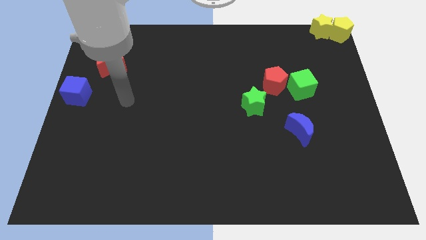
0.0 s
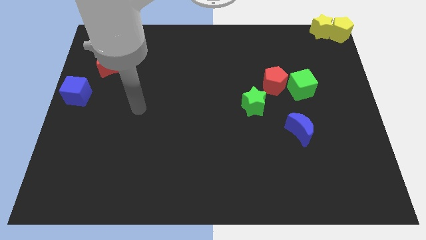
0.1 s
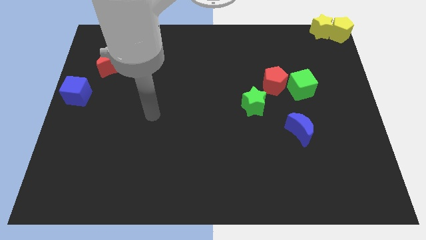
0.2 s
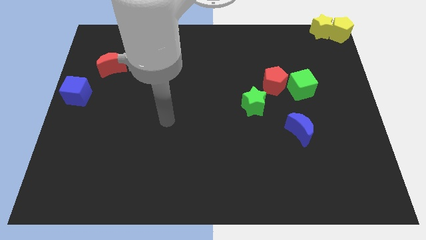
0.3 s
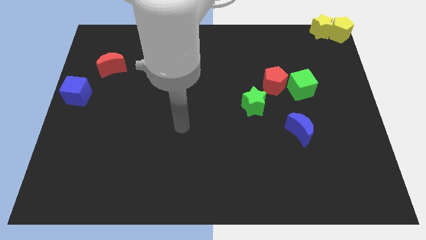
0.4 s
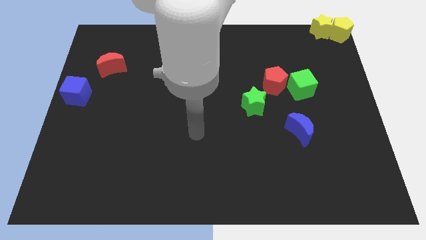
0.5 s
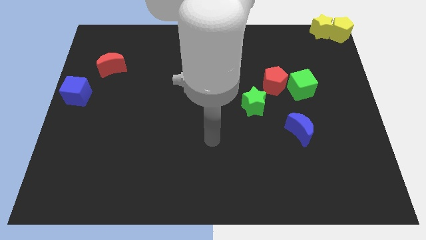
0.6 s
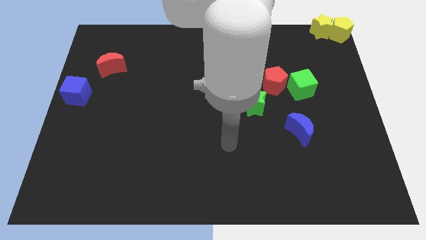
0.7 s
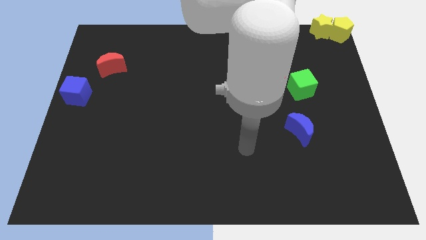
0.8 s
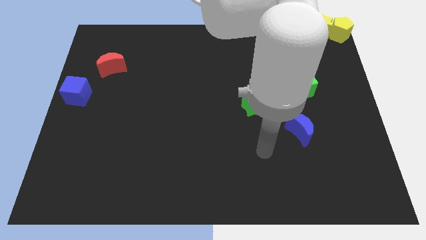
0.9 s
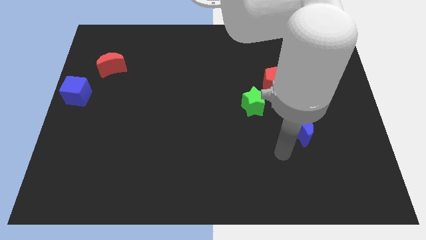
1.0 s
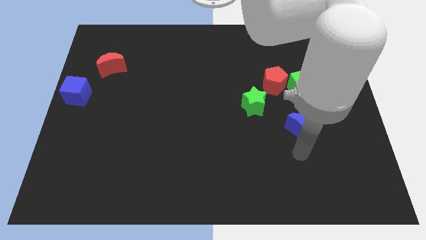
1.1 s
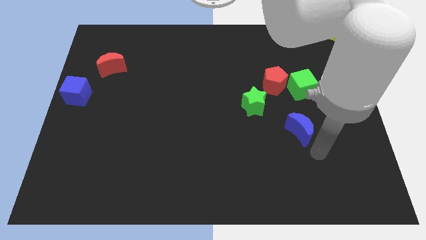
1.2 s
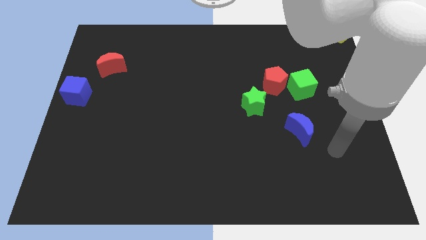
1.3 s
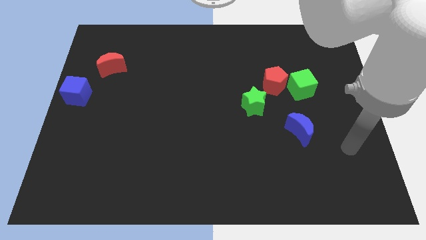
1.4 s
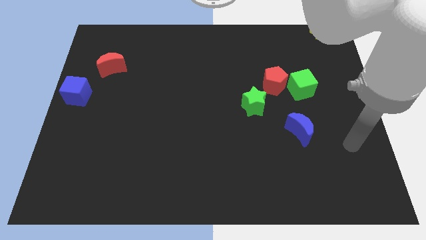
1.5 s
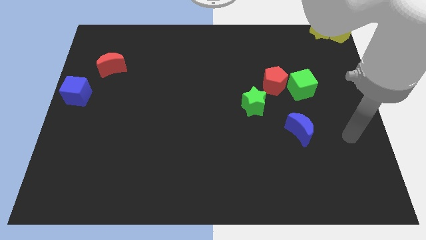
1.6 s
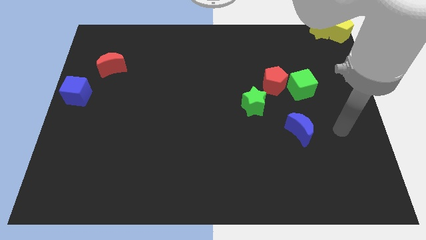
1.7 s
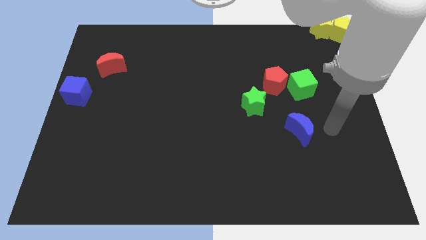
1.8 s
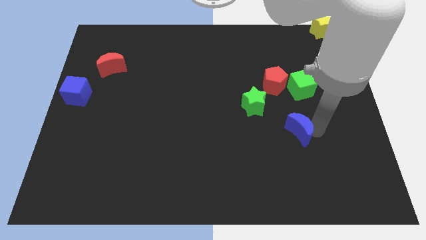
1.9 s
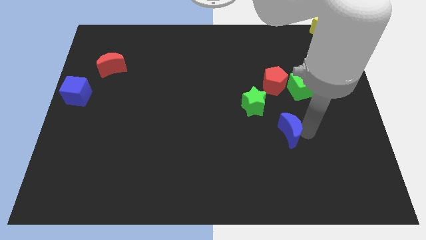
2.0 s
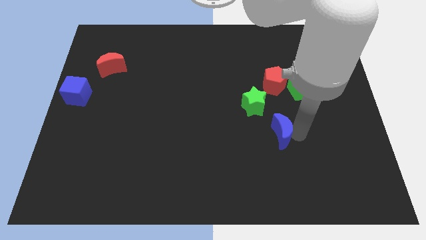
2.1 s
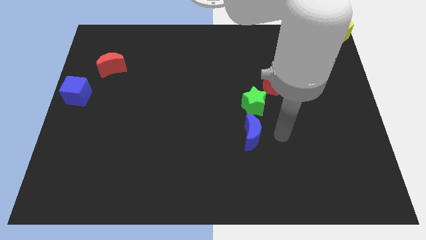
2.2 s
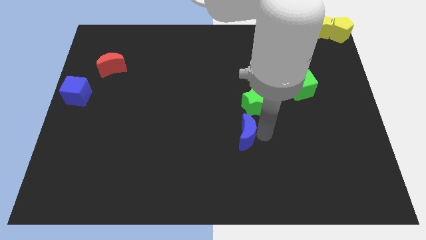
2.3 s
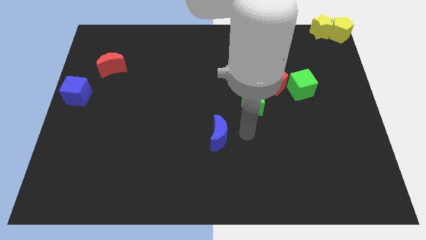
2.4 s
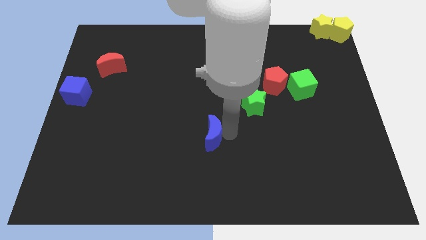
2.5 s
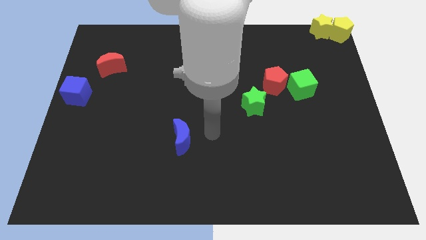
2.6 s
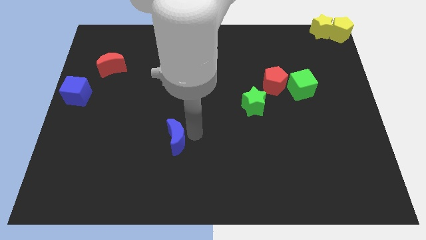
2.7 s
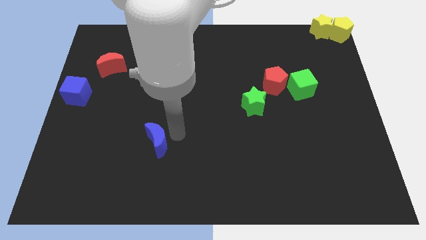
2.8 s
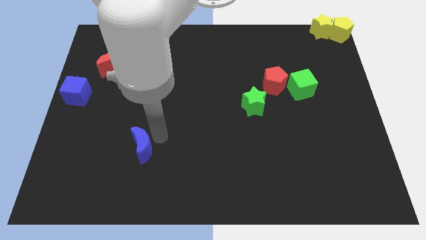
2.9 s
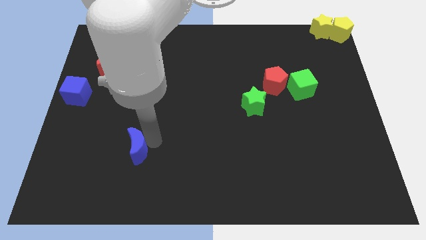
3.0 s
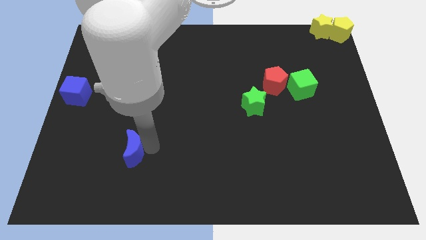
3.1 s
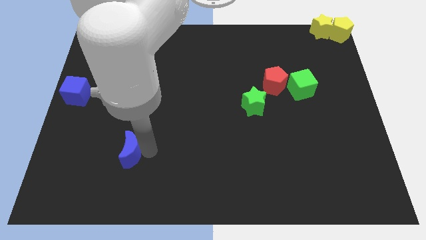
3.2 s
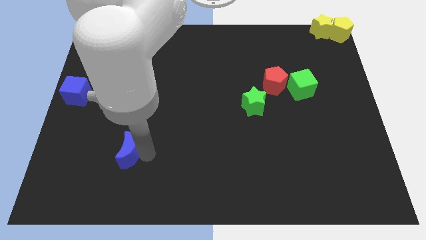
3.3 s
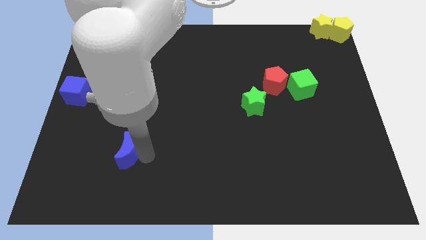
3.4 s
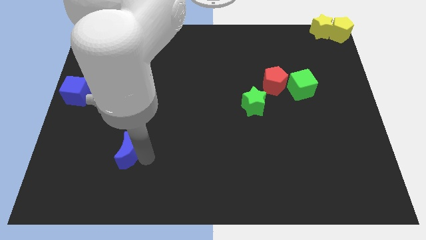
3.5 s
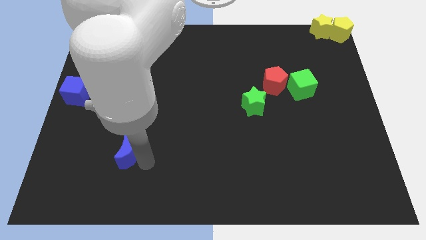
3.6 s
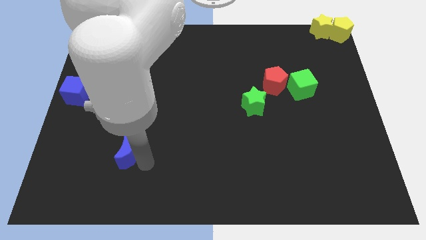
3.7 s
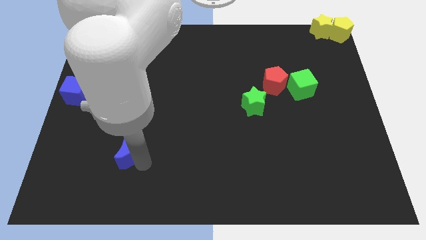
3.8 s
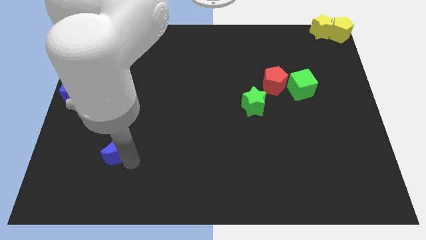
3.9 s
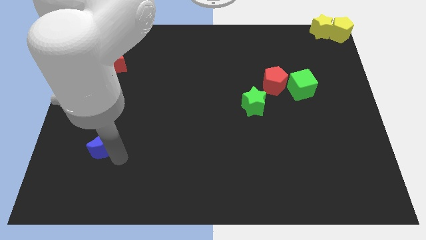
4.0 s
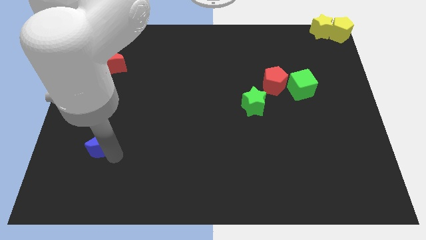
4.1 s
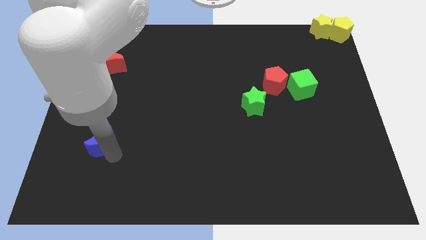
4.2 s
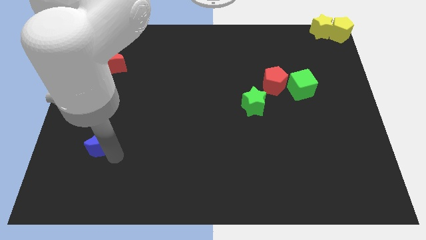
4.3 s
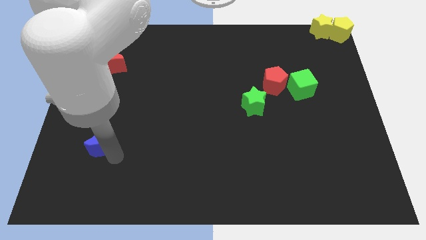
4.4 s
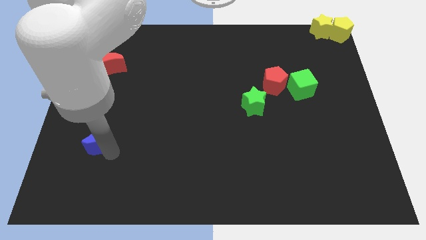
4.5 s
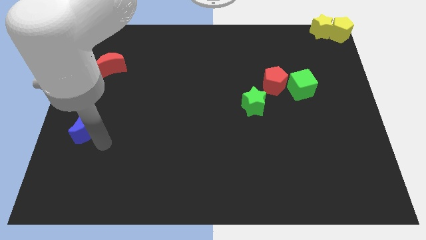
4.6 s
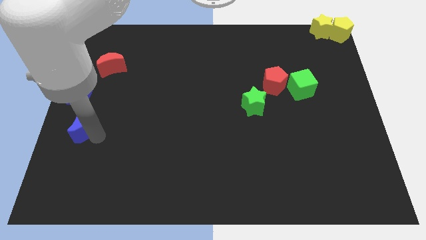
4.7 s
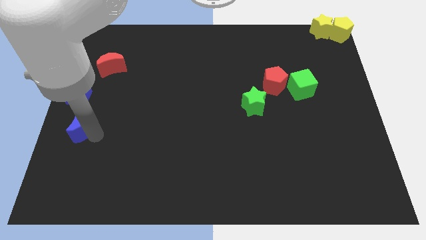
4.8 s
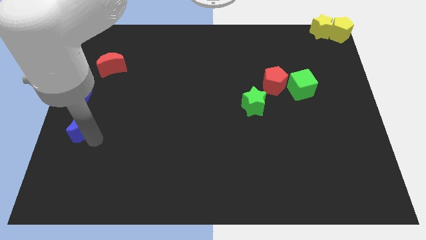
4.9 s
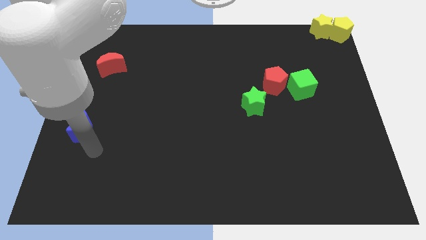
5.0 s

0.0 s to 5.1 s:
push the blue moon towards the blue cube

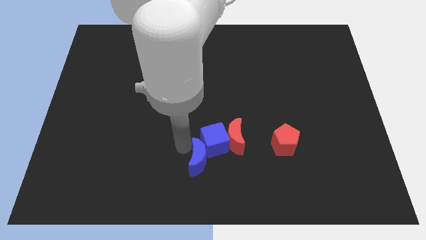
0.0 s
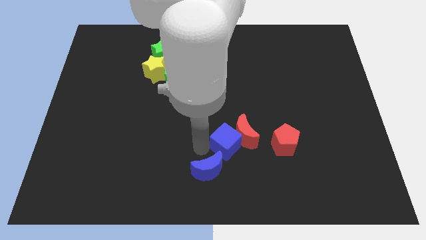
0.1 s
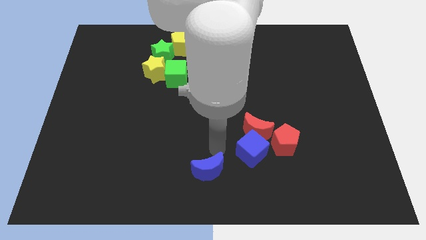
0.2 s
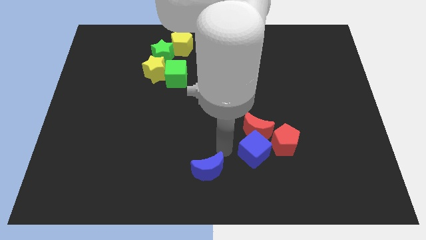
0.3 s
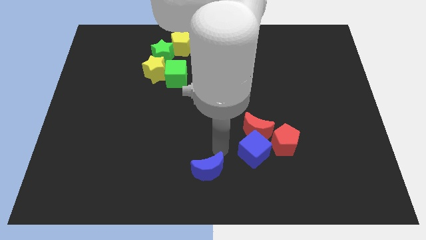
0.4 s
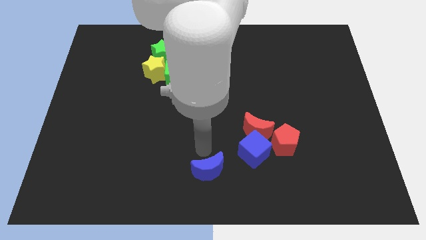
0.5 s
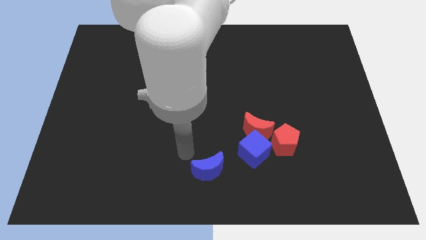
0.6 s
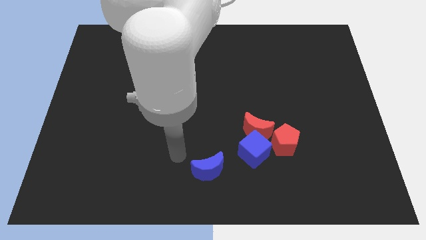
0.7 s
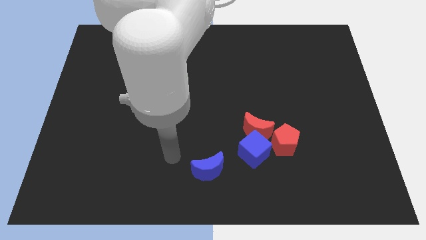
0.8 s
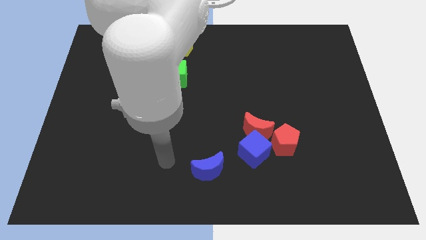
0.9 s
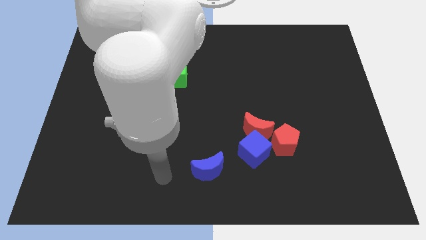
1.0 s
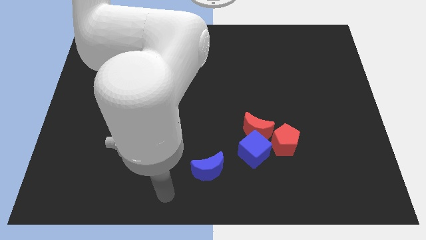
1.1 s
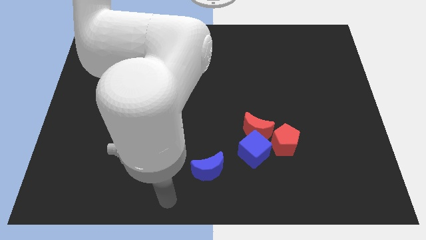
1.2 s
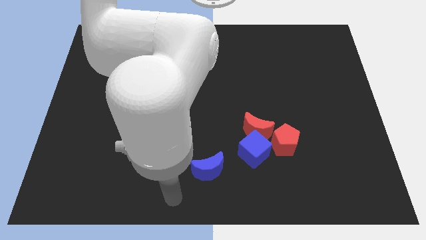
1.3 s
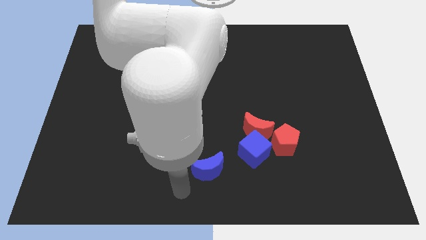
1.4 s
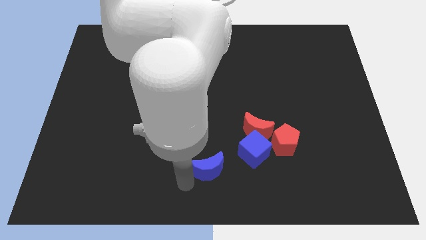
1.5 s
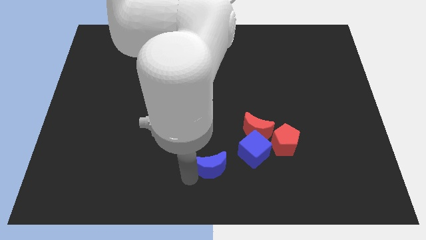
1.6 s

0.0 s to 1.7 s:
move the blue cube to bottom of red blocks

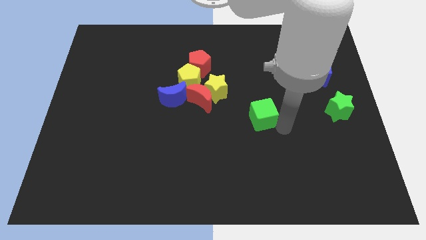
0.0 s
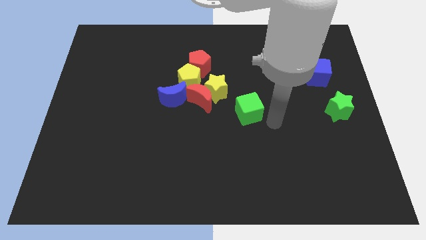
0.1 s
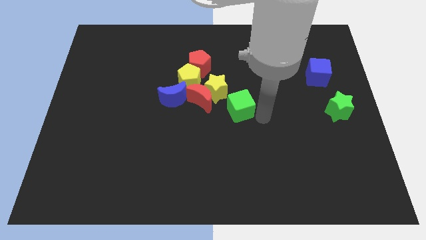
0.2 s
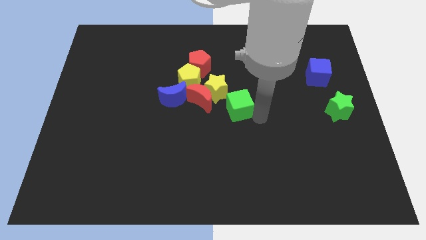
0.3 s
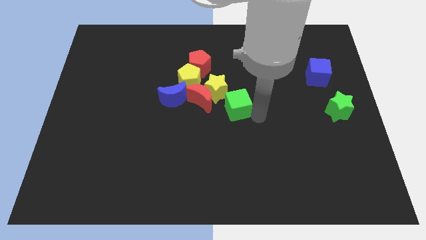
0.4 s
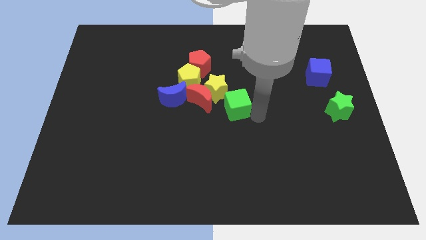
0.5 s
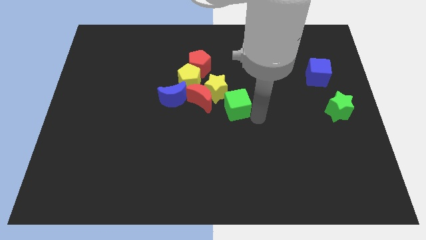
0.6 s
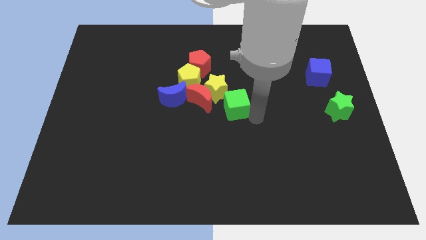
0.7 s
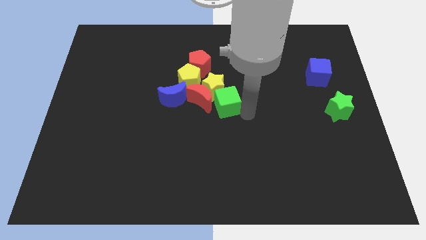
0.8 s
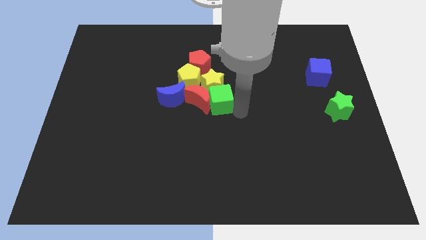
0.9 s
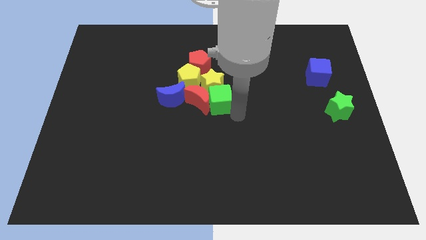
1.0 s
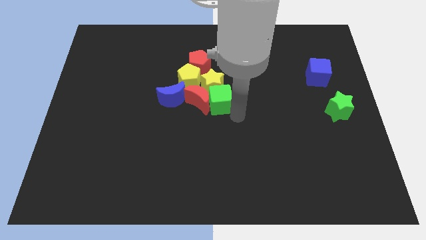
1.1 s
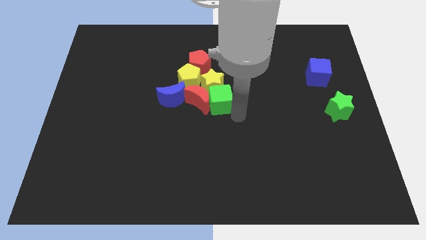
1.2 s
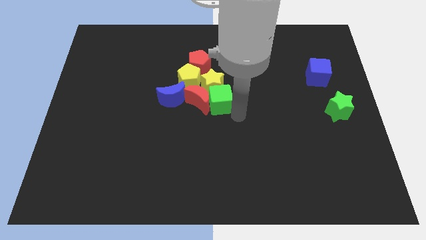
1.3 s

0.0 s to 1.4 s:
move the green cube towards the group of blocks

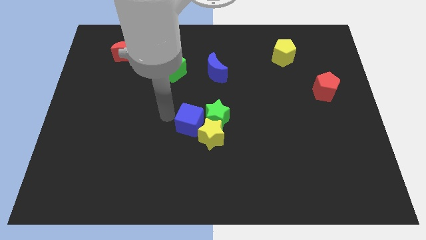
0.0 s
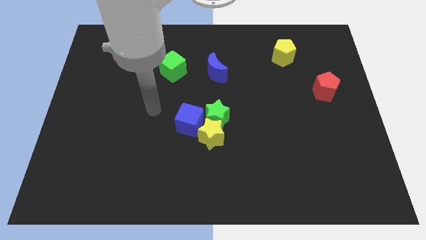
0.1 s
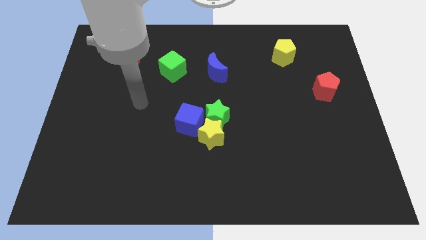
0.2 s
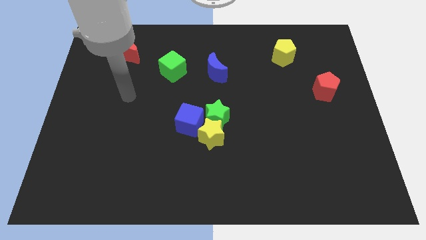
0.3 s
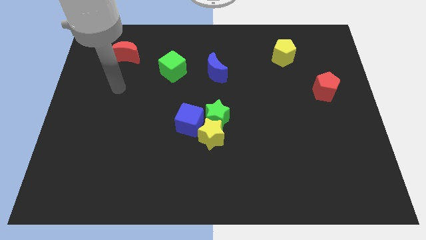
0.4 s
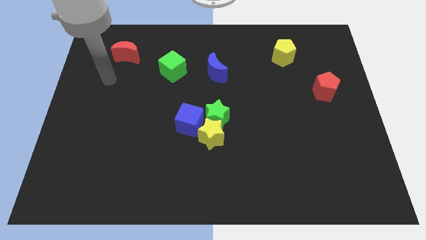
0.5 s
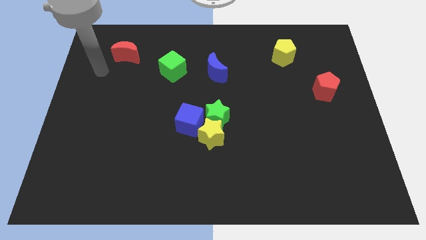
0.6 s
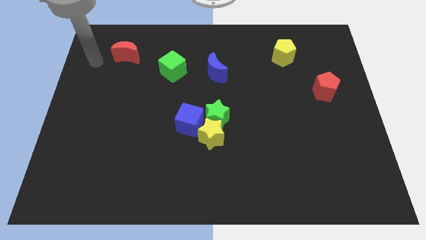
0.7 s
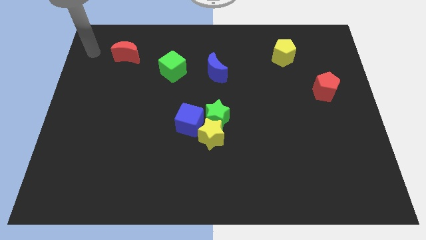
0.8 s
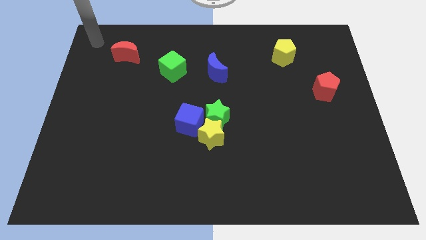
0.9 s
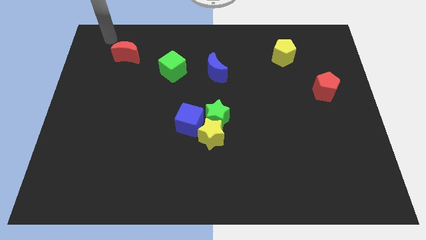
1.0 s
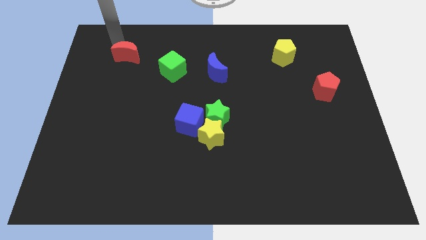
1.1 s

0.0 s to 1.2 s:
move your arm to the top of the red crescent
